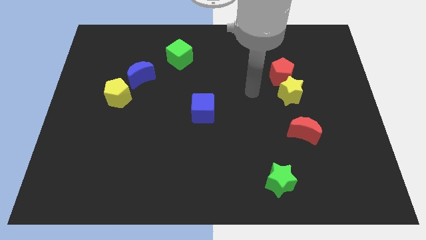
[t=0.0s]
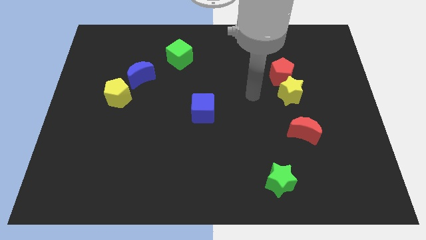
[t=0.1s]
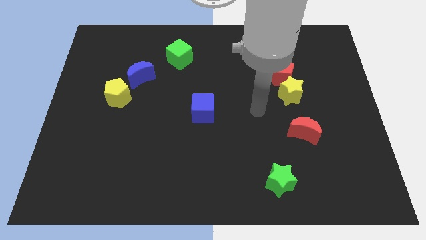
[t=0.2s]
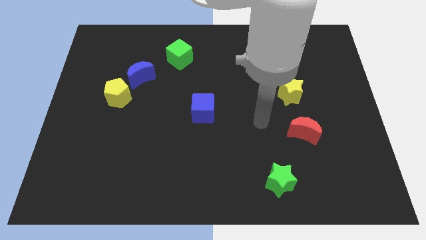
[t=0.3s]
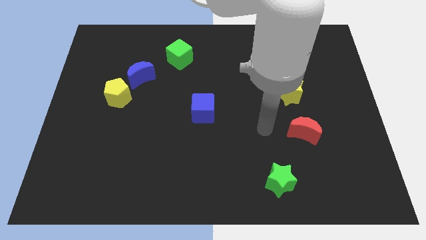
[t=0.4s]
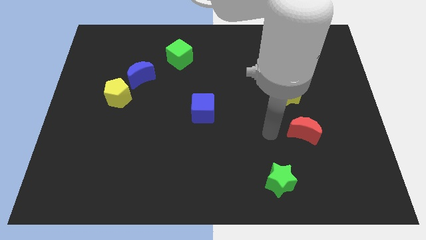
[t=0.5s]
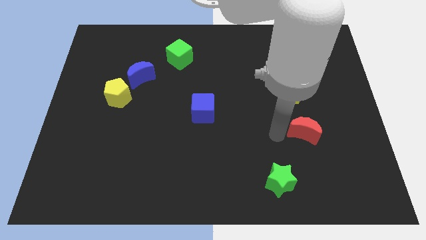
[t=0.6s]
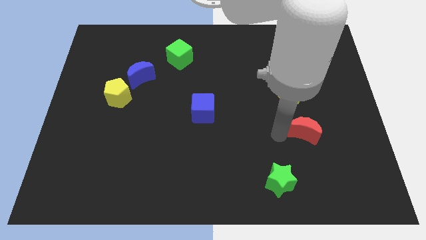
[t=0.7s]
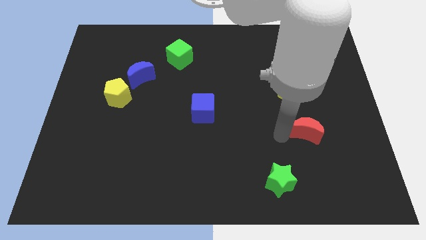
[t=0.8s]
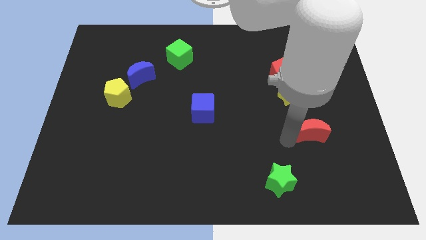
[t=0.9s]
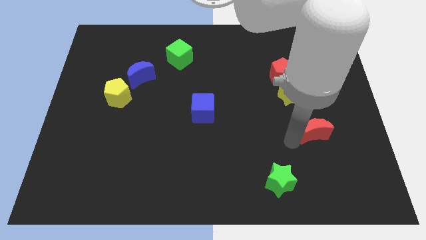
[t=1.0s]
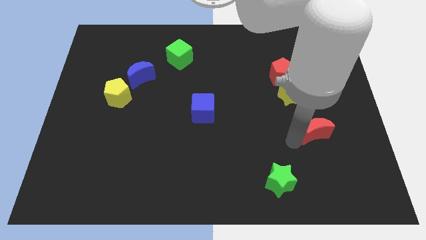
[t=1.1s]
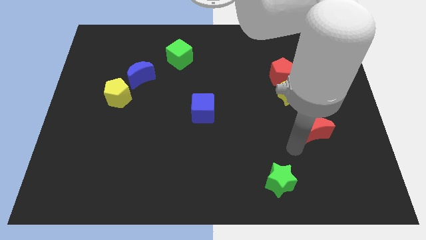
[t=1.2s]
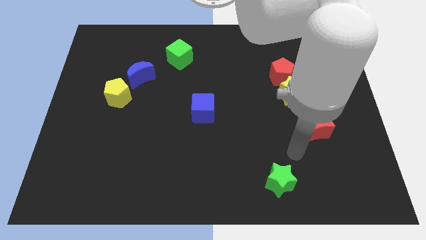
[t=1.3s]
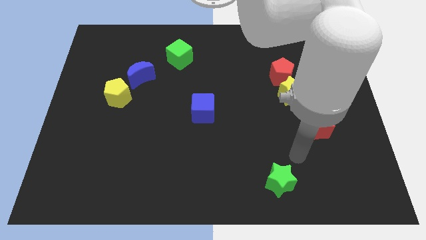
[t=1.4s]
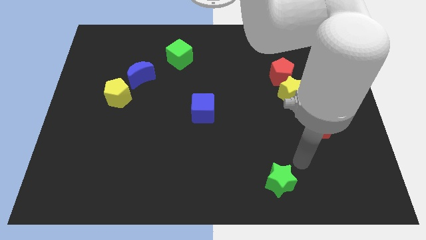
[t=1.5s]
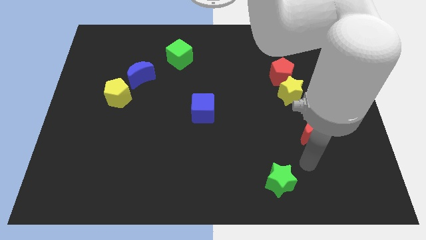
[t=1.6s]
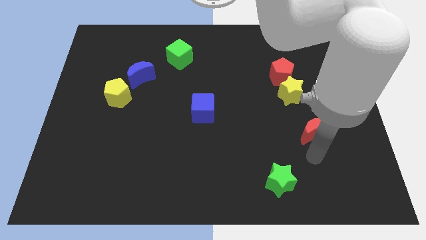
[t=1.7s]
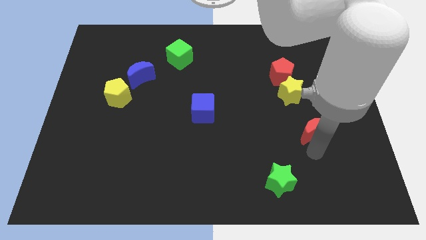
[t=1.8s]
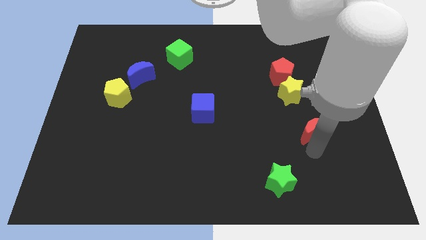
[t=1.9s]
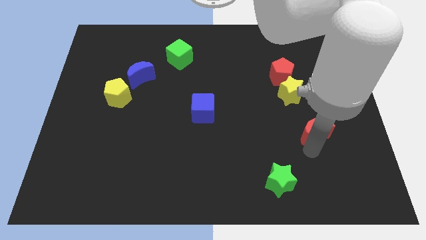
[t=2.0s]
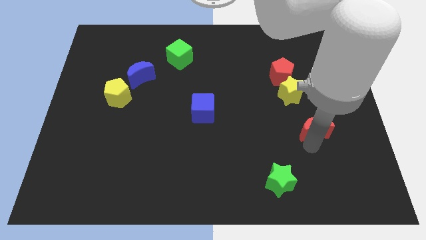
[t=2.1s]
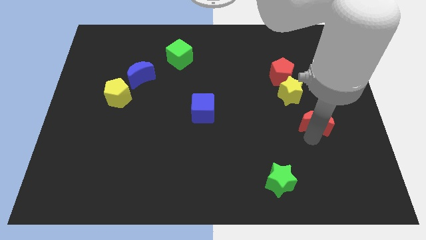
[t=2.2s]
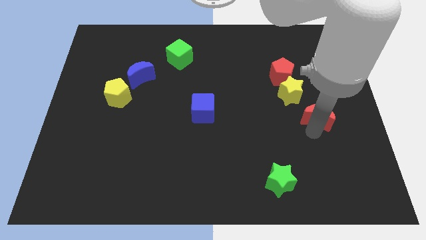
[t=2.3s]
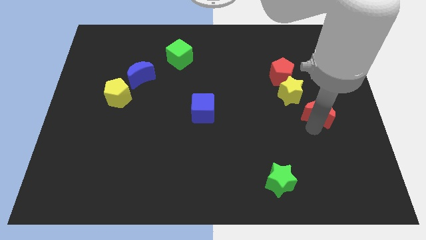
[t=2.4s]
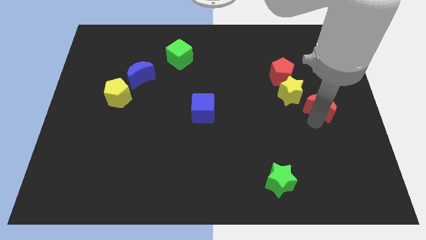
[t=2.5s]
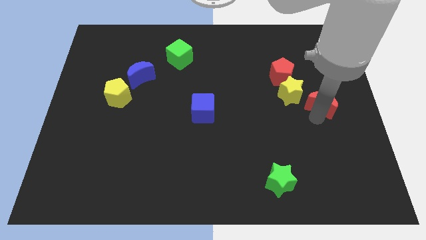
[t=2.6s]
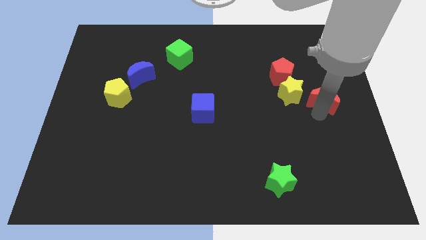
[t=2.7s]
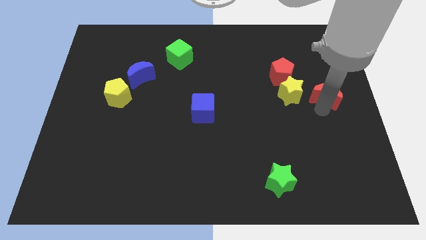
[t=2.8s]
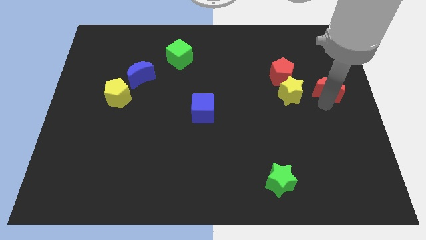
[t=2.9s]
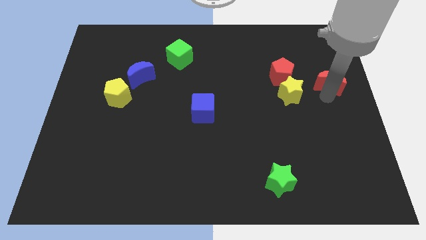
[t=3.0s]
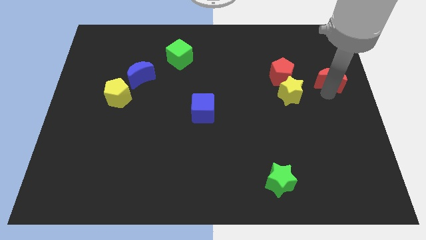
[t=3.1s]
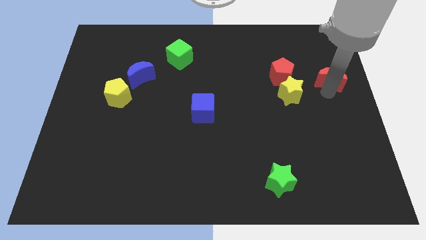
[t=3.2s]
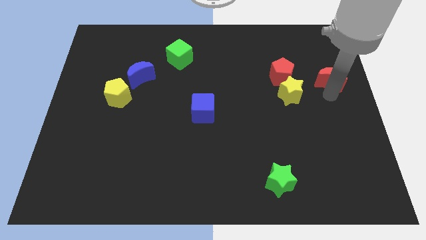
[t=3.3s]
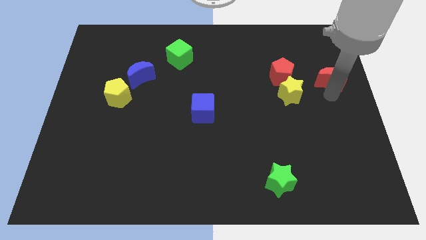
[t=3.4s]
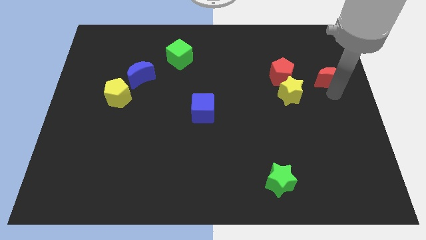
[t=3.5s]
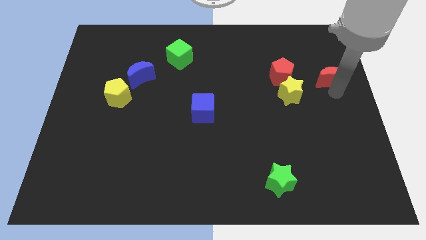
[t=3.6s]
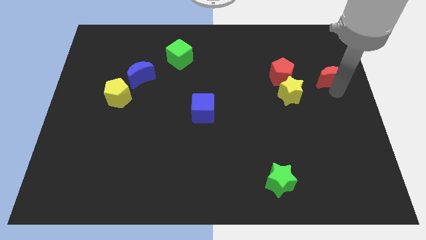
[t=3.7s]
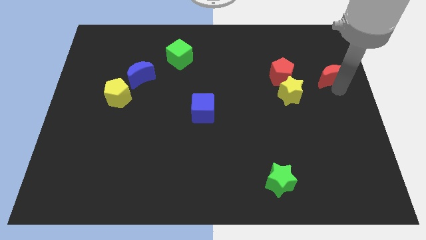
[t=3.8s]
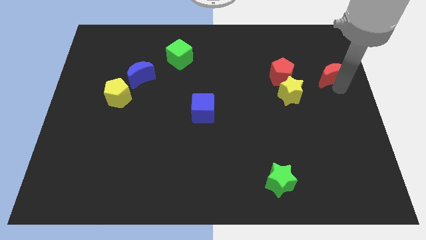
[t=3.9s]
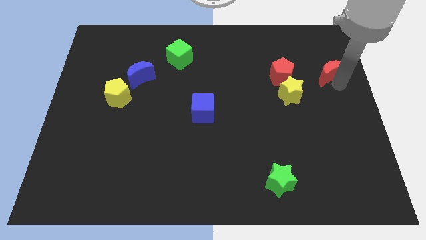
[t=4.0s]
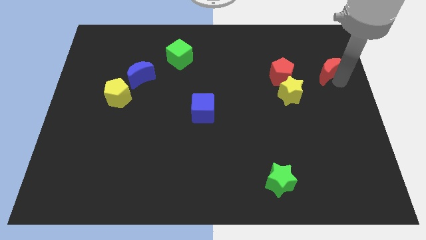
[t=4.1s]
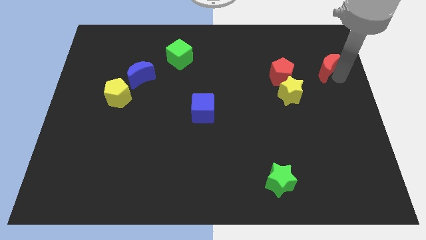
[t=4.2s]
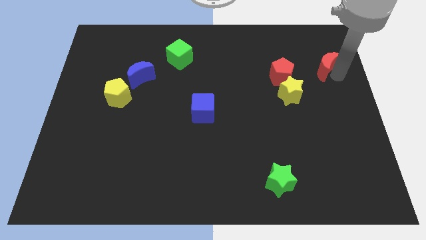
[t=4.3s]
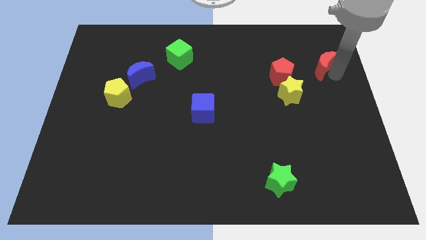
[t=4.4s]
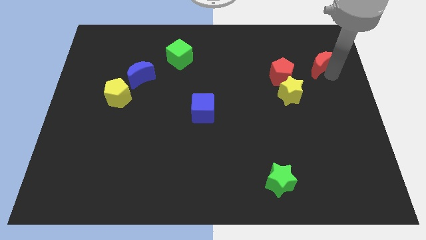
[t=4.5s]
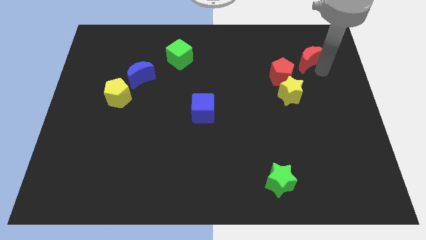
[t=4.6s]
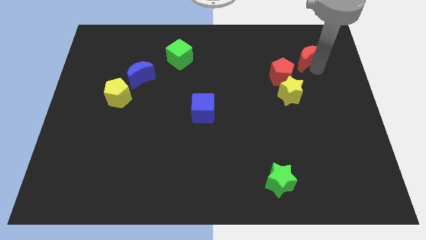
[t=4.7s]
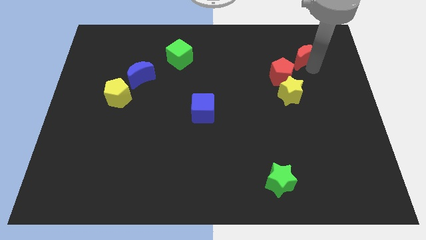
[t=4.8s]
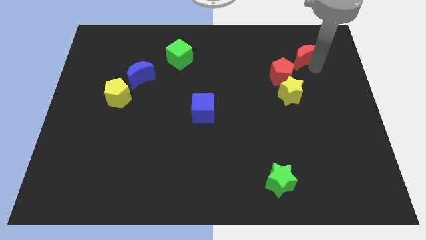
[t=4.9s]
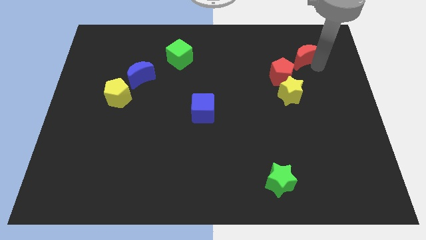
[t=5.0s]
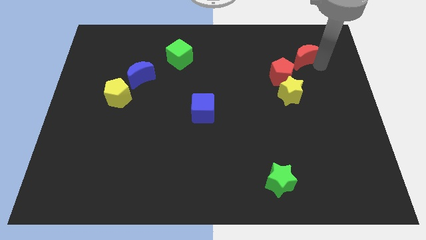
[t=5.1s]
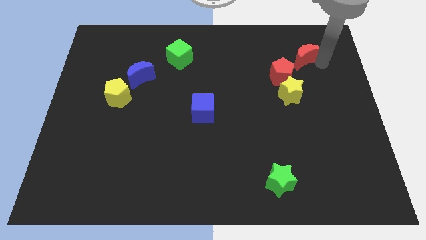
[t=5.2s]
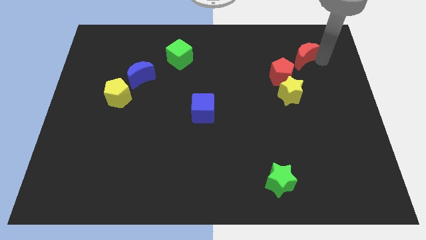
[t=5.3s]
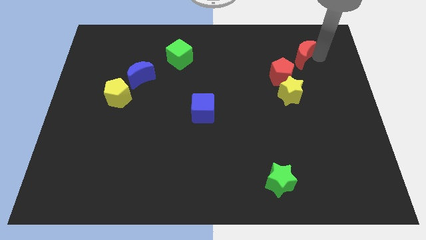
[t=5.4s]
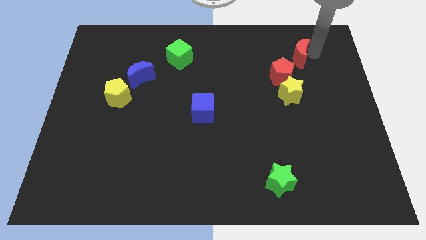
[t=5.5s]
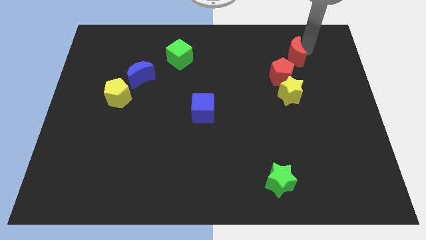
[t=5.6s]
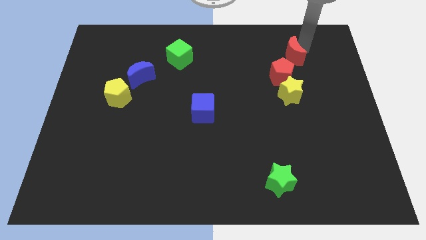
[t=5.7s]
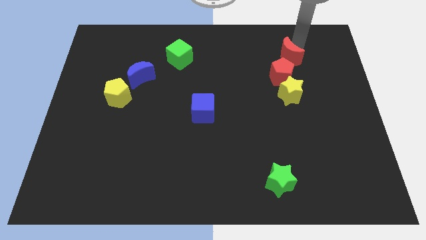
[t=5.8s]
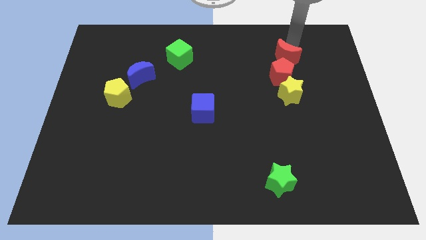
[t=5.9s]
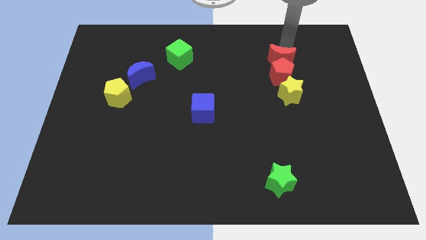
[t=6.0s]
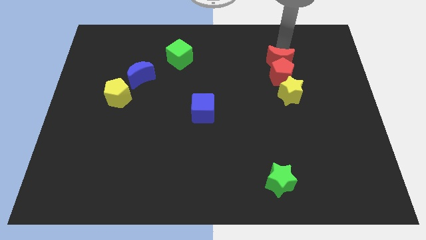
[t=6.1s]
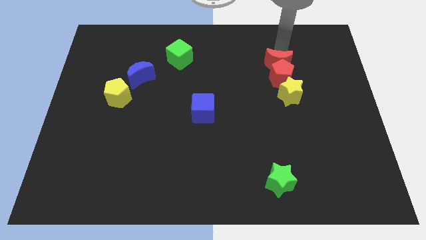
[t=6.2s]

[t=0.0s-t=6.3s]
move the red moon close to the red pentagon

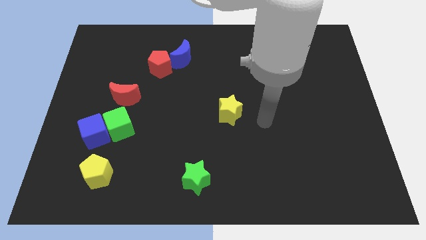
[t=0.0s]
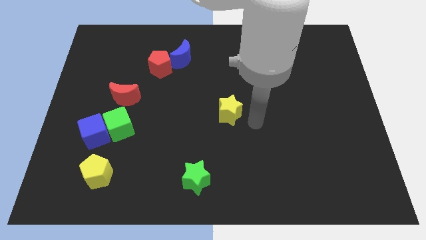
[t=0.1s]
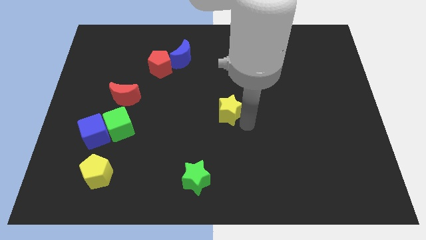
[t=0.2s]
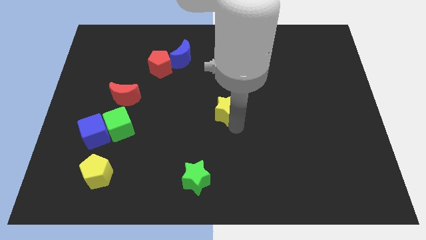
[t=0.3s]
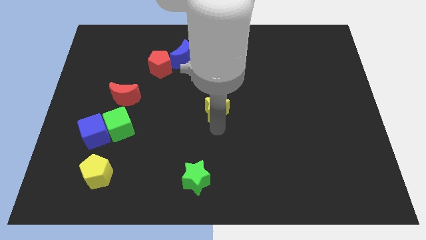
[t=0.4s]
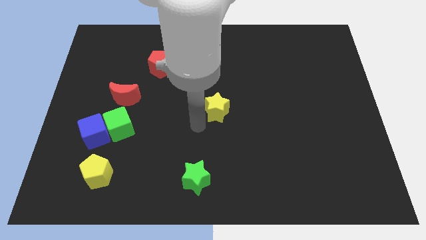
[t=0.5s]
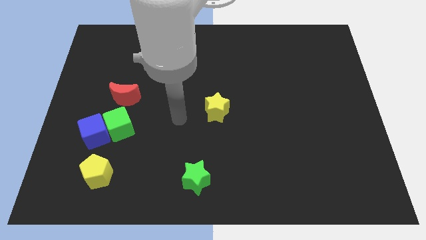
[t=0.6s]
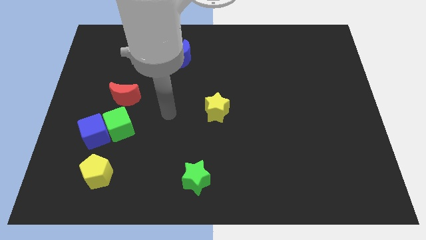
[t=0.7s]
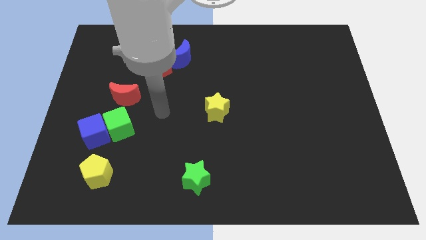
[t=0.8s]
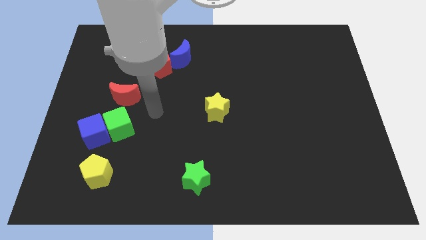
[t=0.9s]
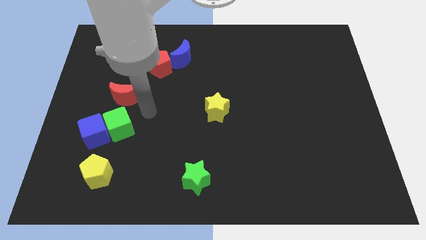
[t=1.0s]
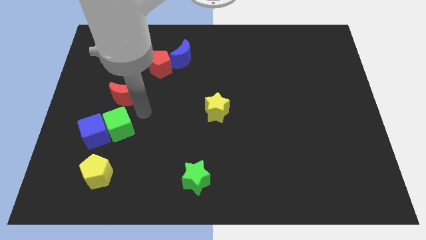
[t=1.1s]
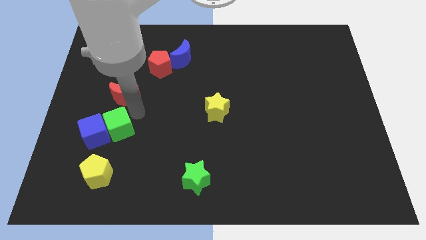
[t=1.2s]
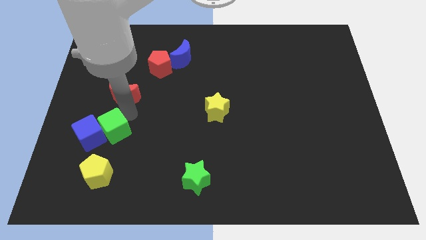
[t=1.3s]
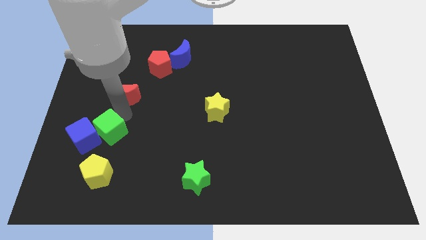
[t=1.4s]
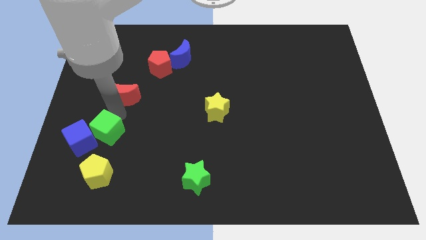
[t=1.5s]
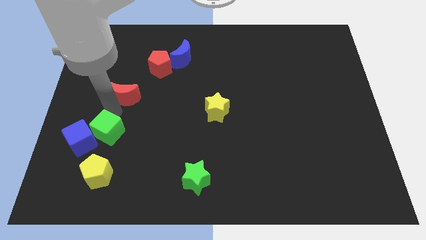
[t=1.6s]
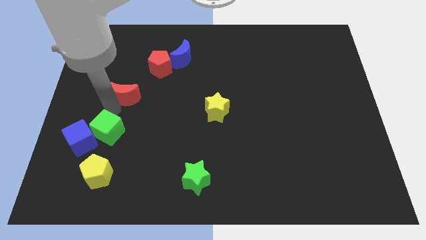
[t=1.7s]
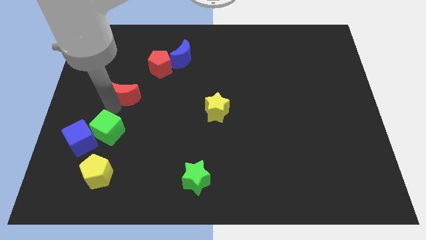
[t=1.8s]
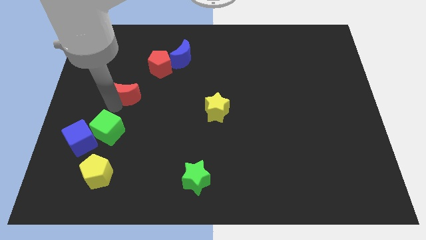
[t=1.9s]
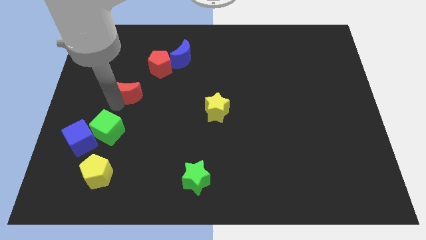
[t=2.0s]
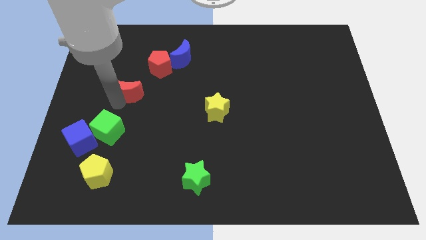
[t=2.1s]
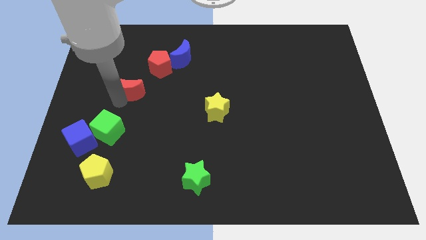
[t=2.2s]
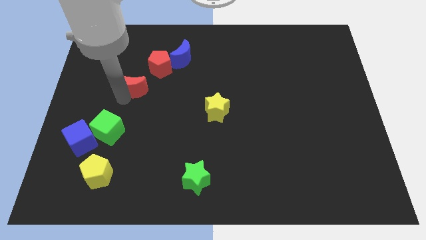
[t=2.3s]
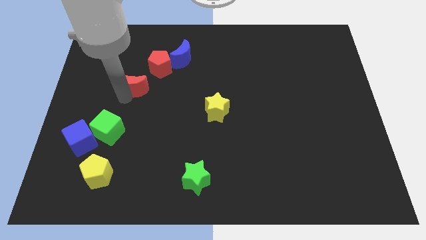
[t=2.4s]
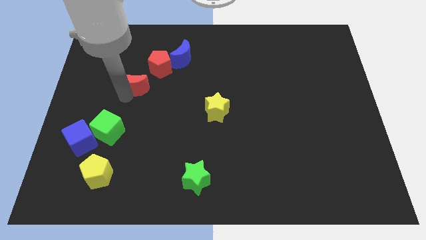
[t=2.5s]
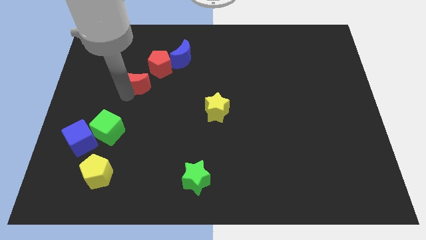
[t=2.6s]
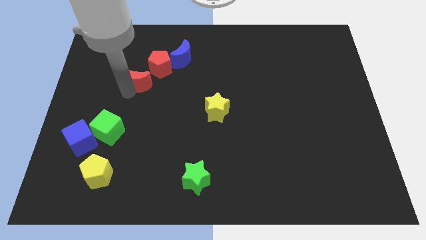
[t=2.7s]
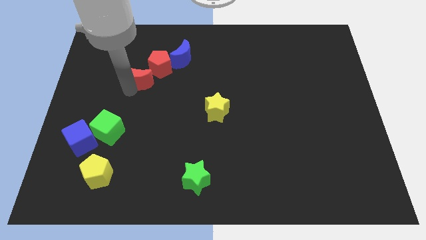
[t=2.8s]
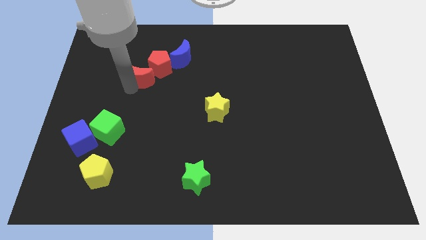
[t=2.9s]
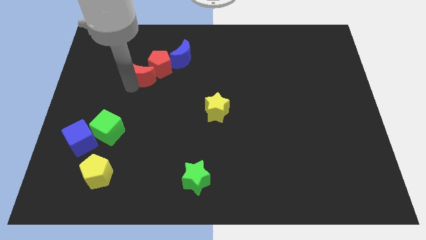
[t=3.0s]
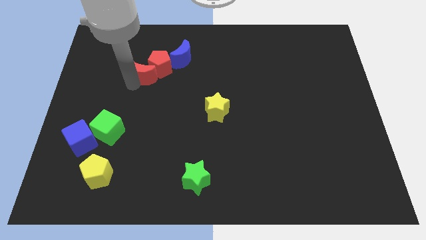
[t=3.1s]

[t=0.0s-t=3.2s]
slide the red moon next to the red pentagon
